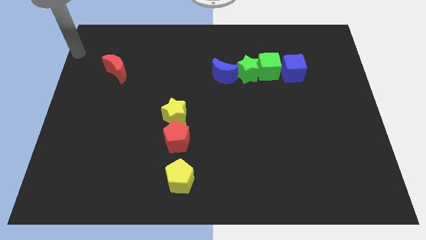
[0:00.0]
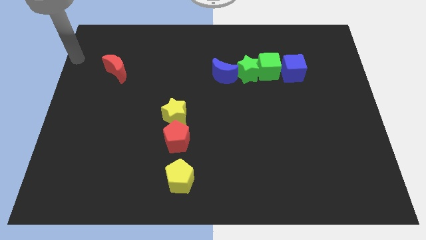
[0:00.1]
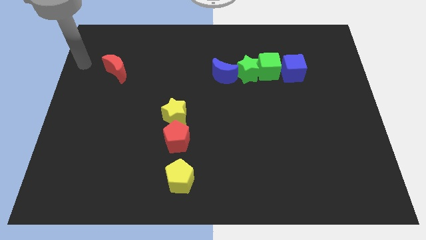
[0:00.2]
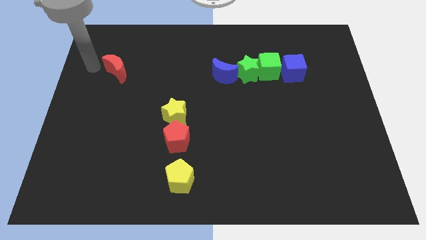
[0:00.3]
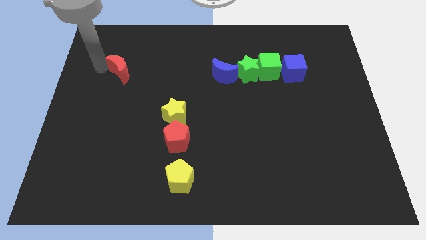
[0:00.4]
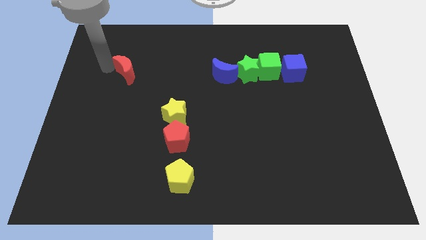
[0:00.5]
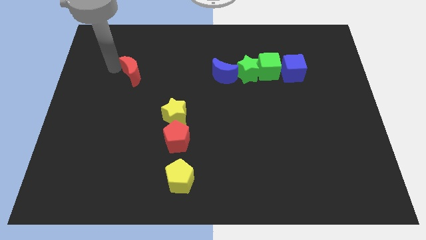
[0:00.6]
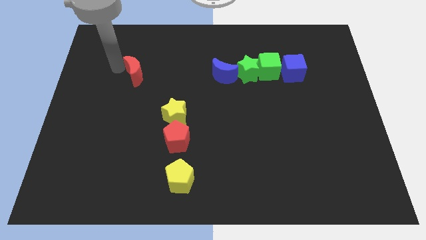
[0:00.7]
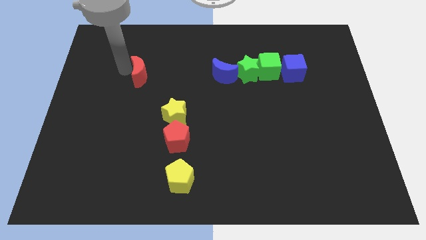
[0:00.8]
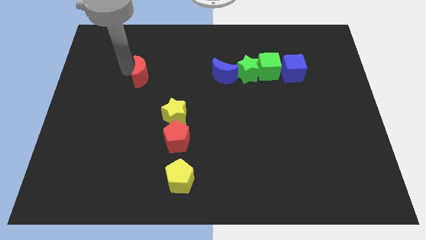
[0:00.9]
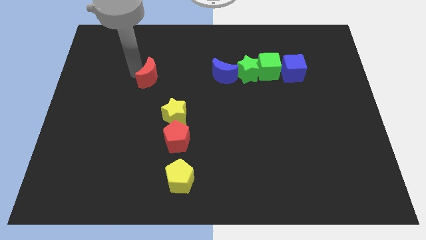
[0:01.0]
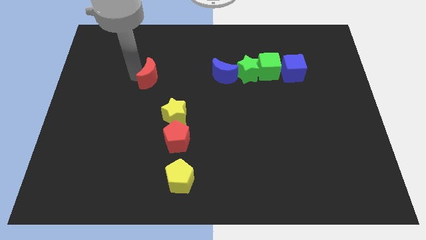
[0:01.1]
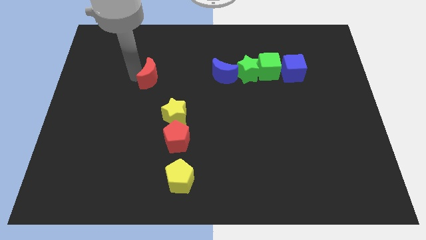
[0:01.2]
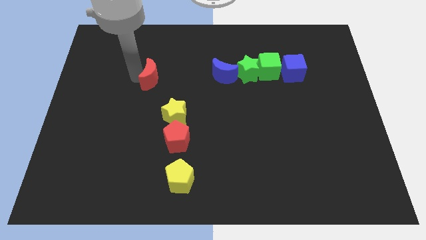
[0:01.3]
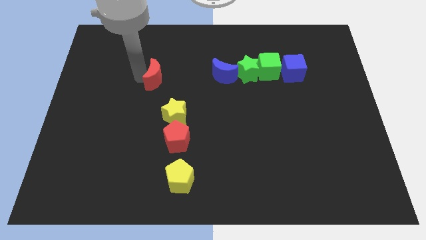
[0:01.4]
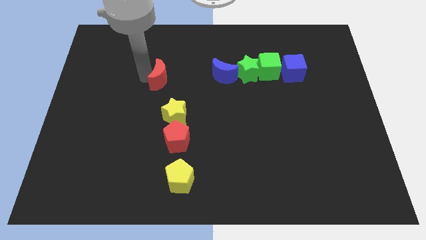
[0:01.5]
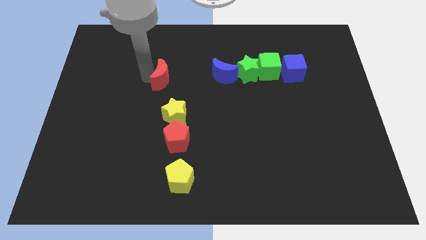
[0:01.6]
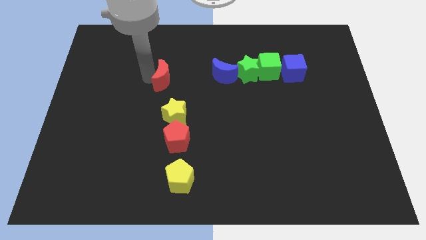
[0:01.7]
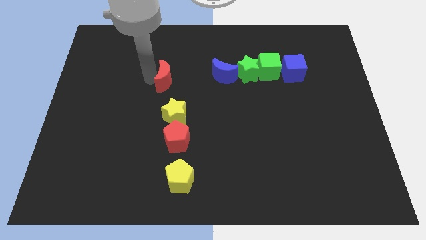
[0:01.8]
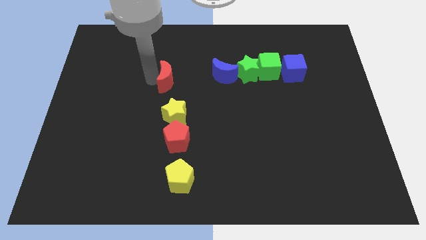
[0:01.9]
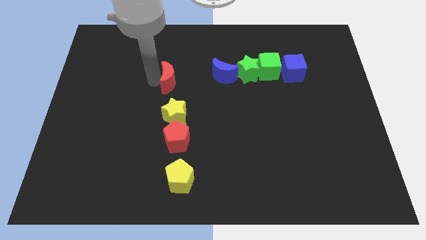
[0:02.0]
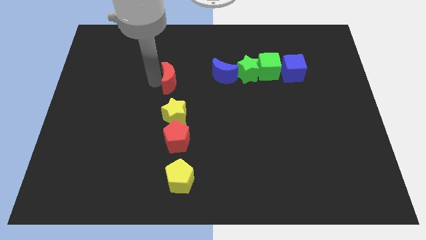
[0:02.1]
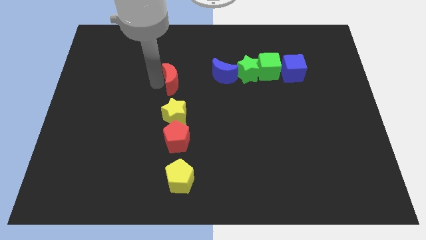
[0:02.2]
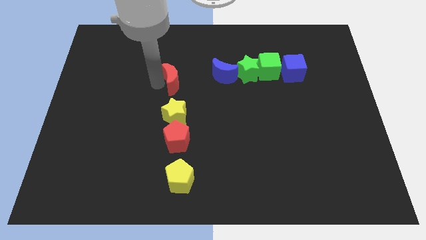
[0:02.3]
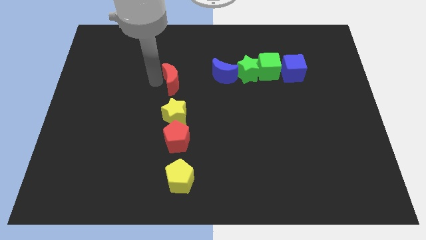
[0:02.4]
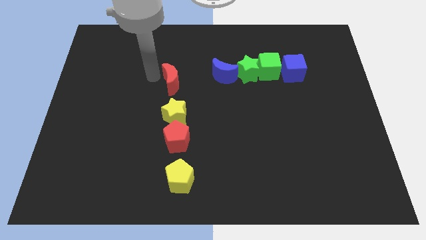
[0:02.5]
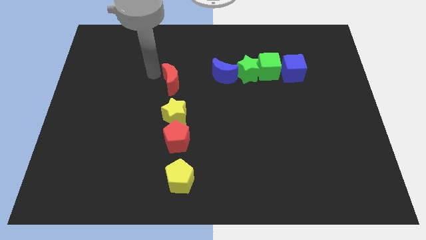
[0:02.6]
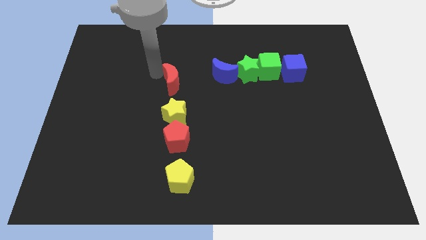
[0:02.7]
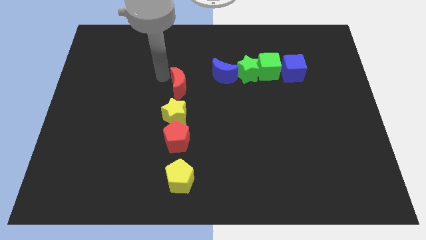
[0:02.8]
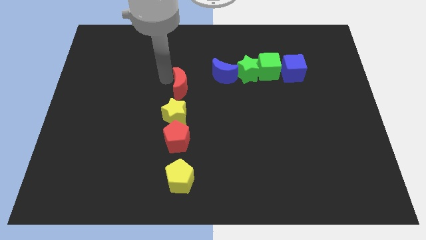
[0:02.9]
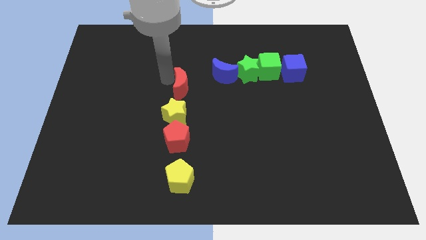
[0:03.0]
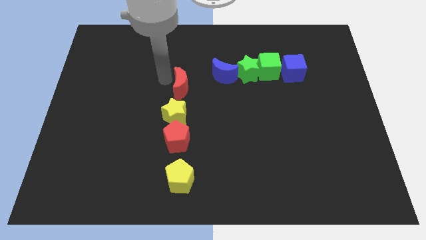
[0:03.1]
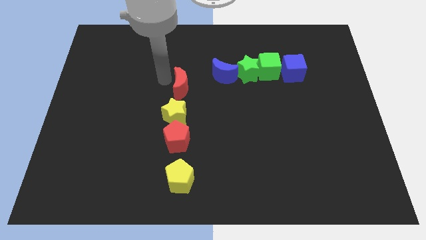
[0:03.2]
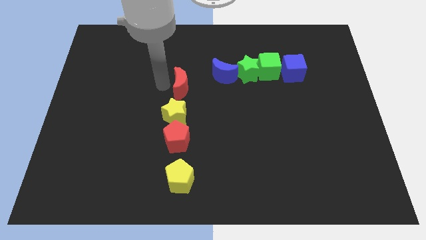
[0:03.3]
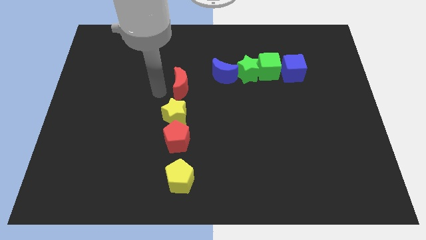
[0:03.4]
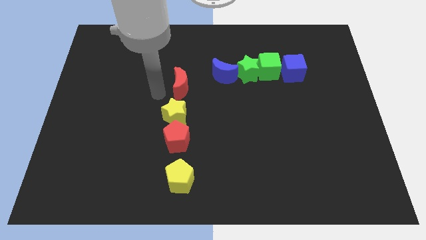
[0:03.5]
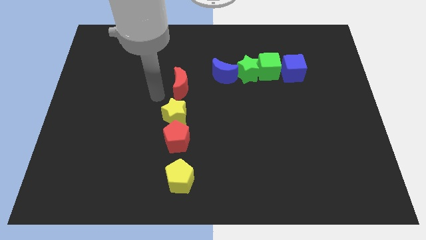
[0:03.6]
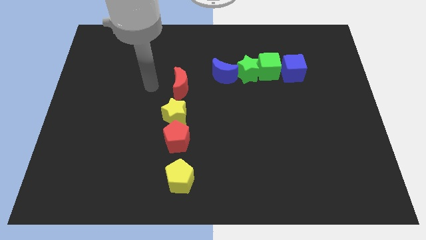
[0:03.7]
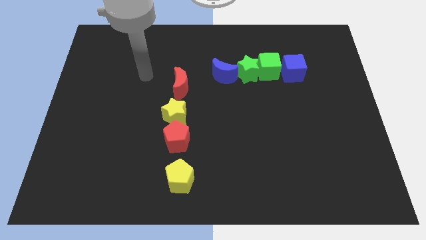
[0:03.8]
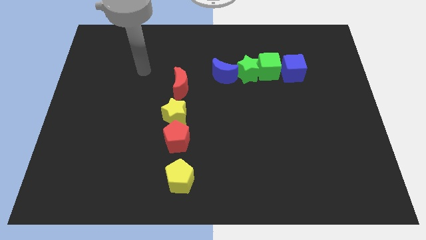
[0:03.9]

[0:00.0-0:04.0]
move red crescent above yellow star

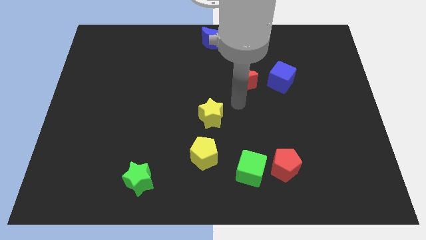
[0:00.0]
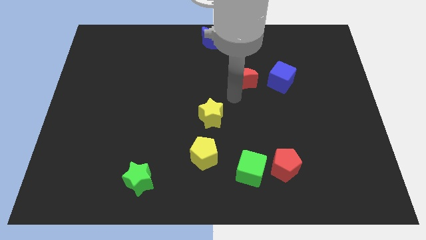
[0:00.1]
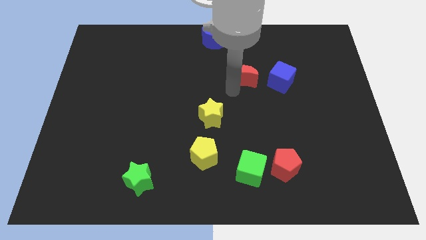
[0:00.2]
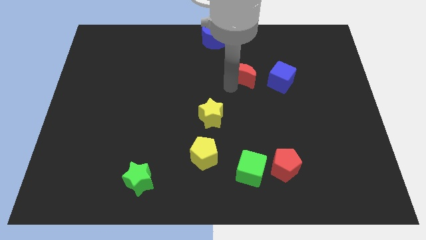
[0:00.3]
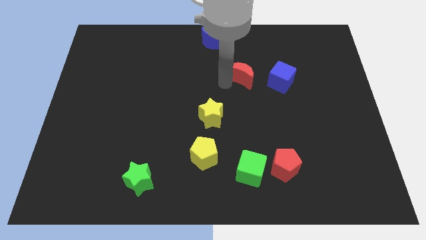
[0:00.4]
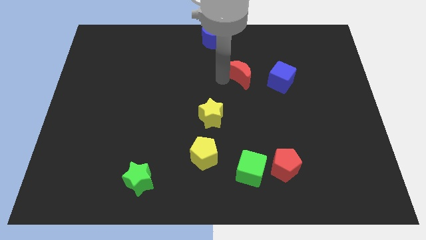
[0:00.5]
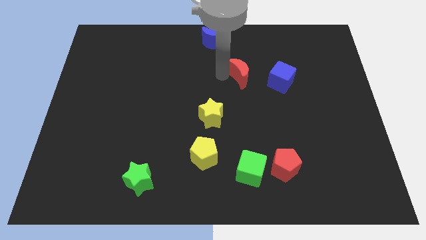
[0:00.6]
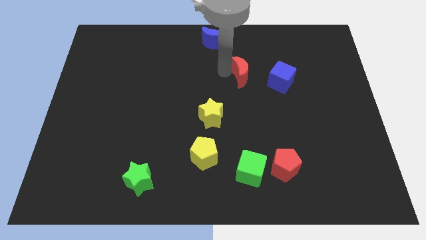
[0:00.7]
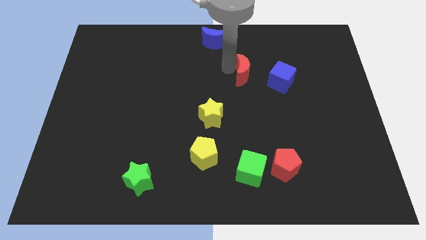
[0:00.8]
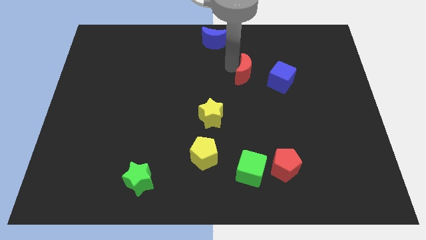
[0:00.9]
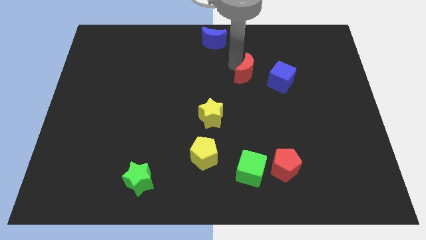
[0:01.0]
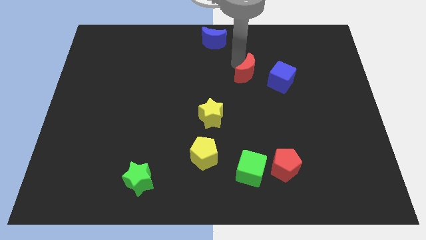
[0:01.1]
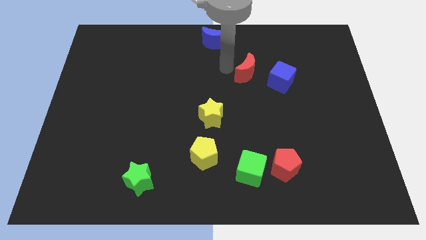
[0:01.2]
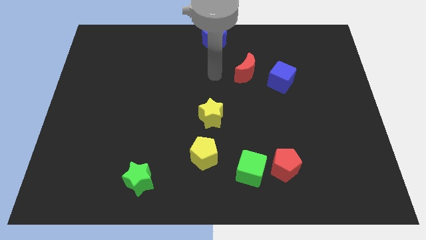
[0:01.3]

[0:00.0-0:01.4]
move the red moon slightly up

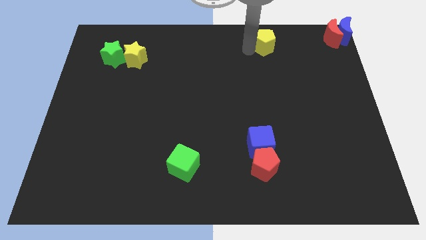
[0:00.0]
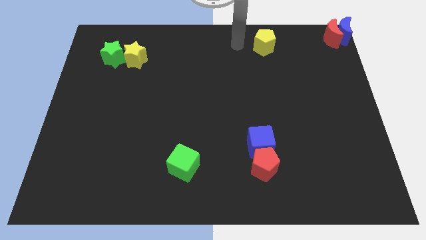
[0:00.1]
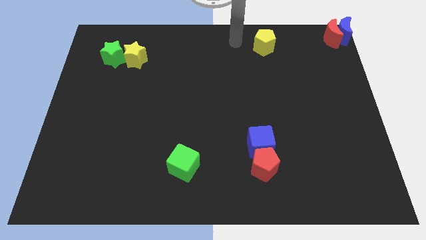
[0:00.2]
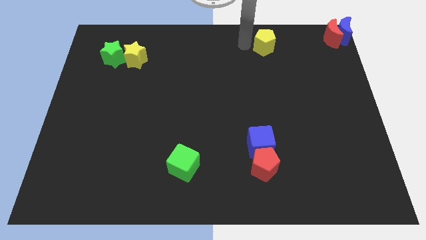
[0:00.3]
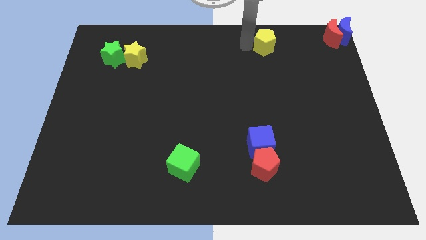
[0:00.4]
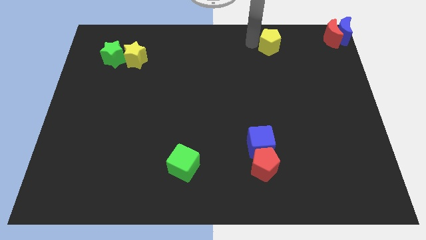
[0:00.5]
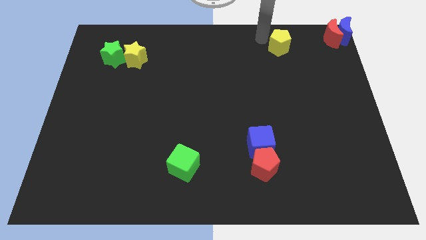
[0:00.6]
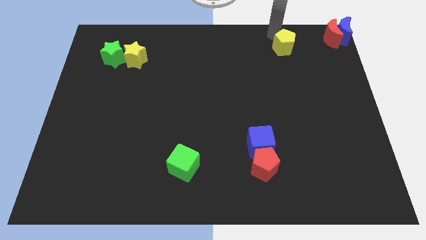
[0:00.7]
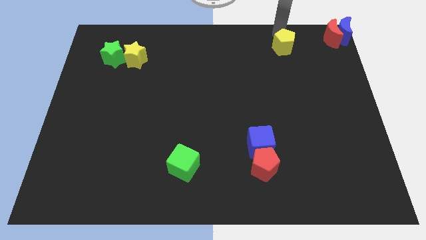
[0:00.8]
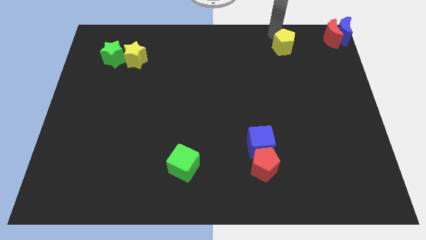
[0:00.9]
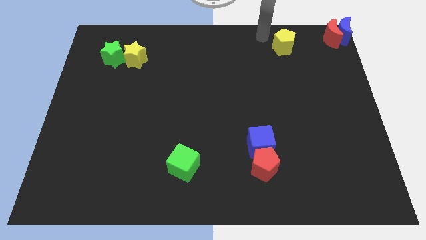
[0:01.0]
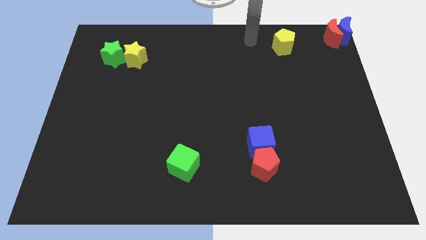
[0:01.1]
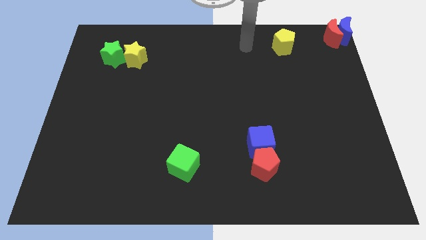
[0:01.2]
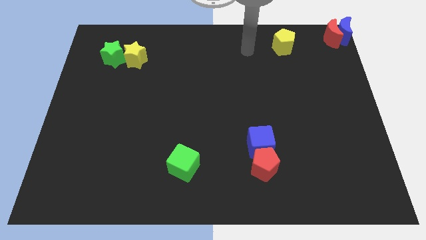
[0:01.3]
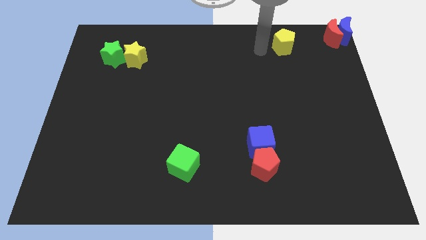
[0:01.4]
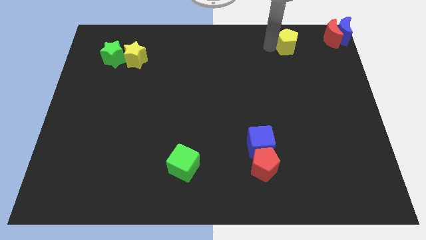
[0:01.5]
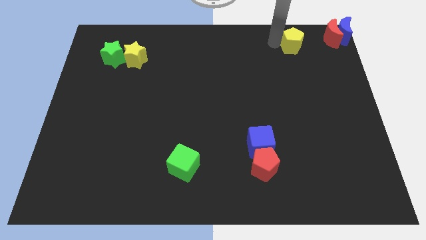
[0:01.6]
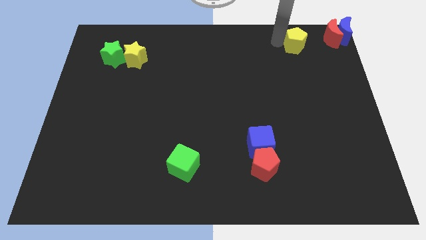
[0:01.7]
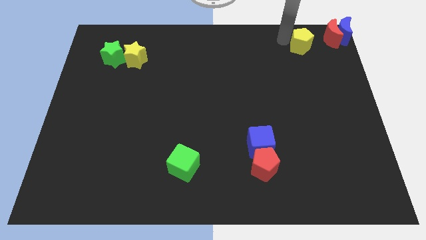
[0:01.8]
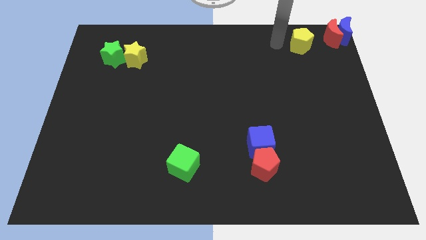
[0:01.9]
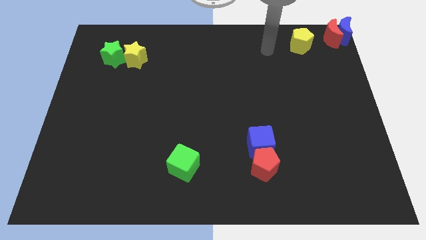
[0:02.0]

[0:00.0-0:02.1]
slide yellow pentagon towards red moon

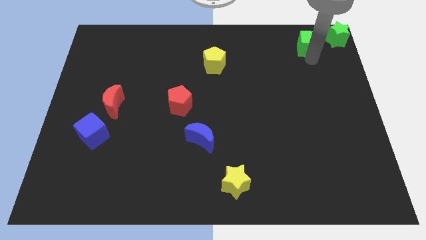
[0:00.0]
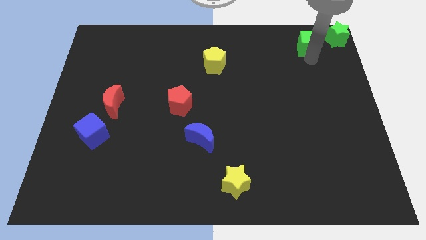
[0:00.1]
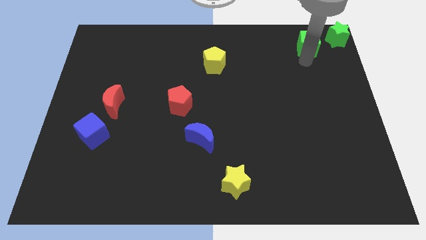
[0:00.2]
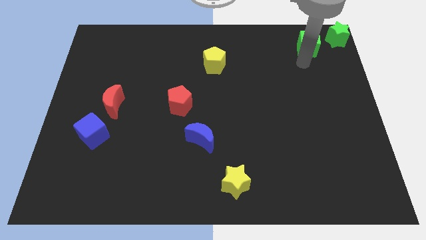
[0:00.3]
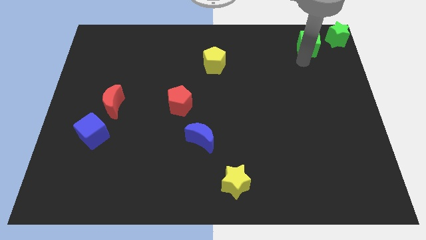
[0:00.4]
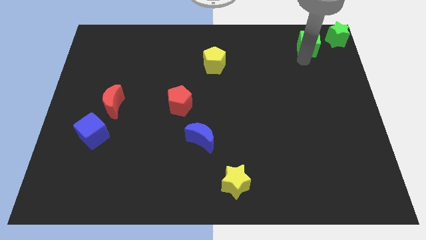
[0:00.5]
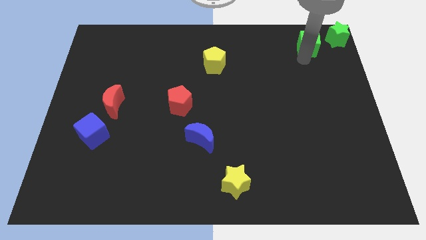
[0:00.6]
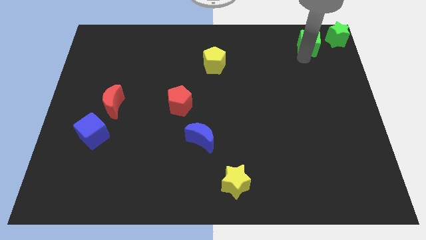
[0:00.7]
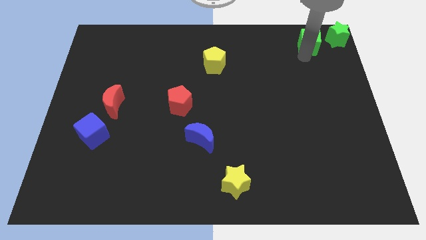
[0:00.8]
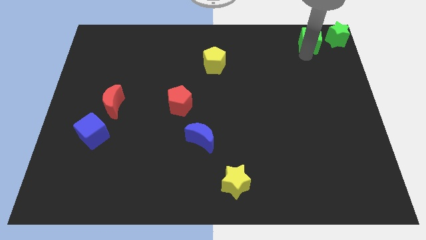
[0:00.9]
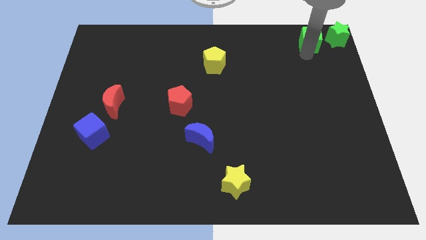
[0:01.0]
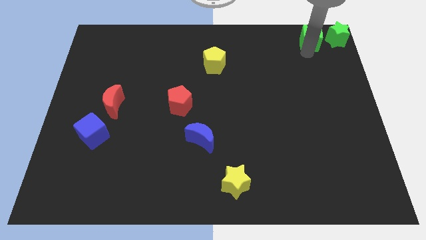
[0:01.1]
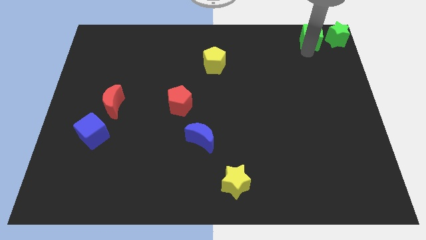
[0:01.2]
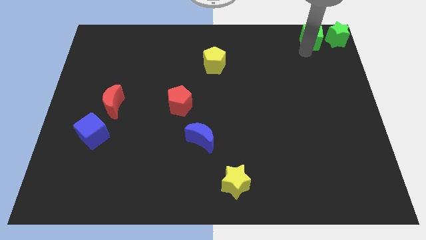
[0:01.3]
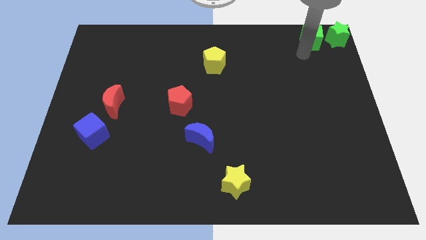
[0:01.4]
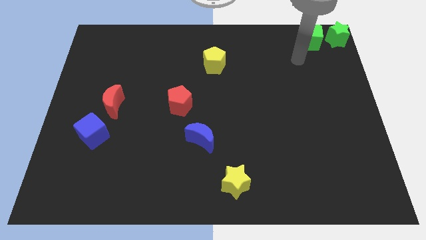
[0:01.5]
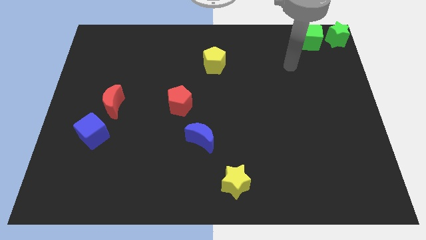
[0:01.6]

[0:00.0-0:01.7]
move the green cube parallel to the left side of the green star
